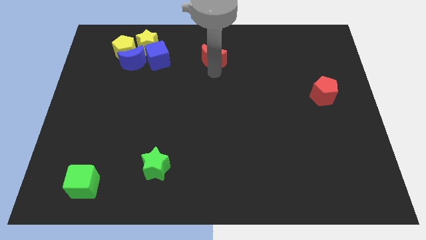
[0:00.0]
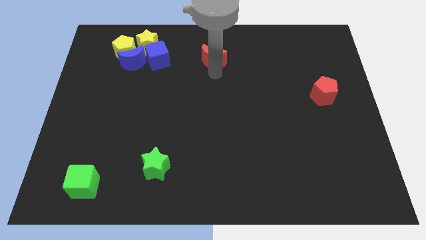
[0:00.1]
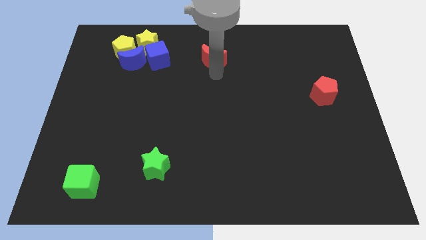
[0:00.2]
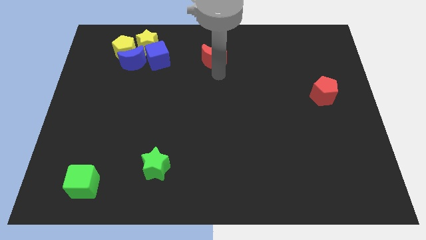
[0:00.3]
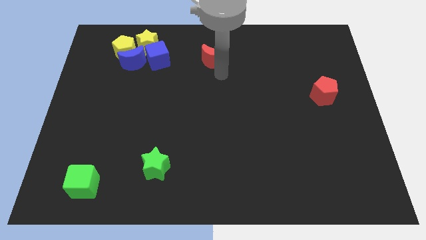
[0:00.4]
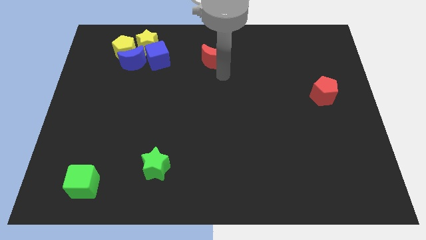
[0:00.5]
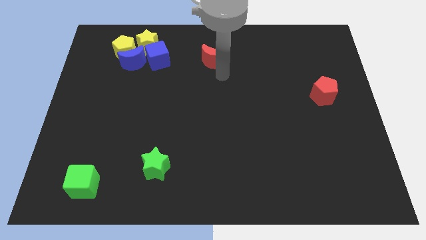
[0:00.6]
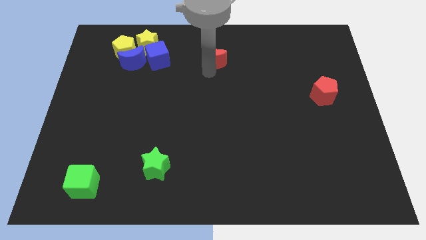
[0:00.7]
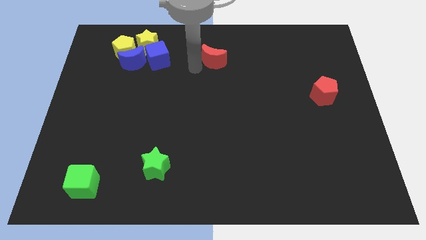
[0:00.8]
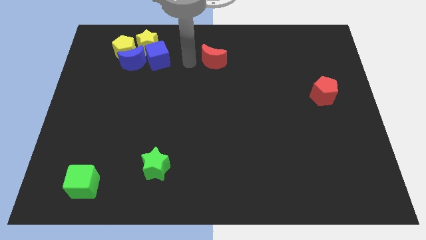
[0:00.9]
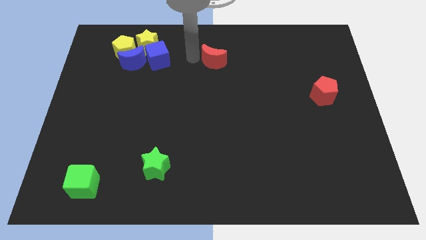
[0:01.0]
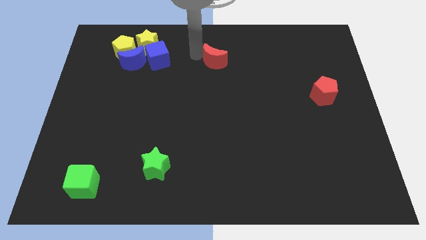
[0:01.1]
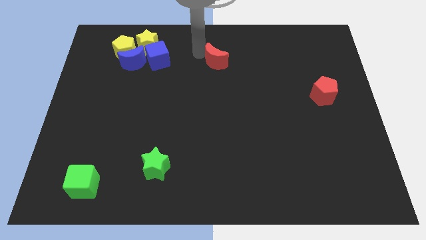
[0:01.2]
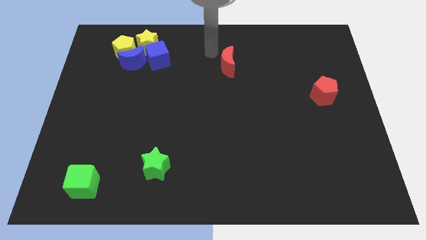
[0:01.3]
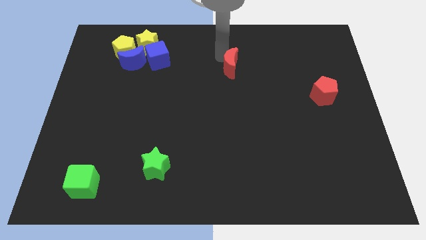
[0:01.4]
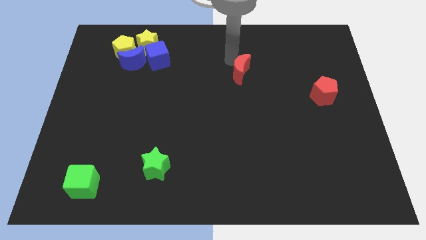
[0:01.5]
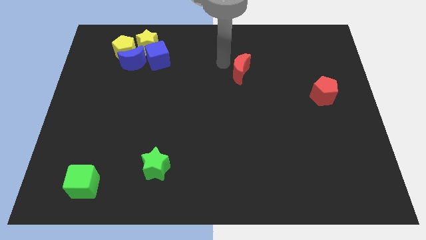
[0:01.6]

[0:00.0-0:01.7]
move red moon towards the red pentagon

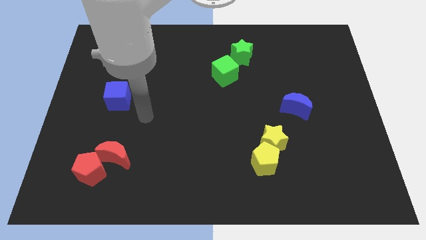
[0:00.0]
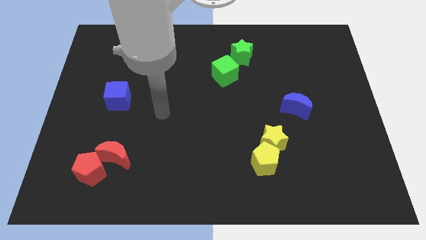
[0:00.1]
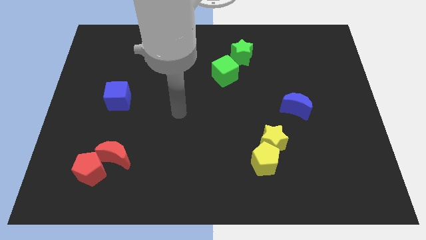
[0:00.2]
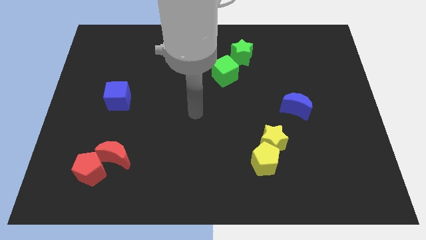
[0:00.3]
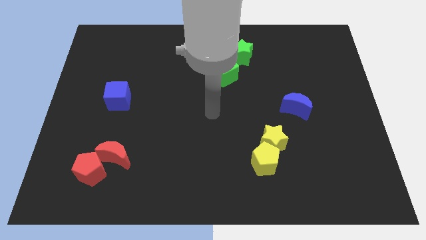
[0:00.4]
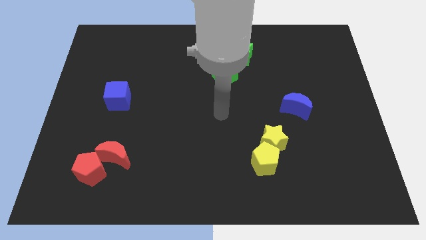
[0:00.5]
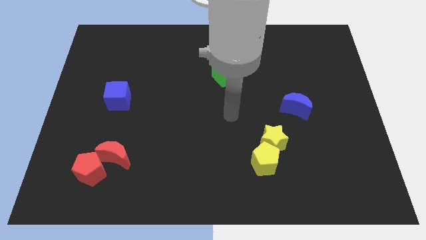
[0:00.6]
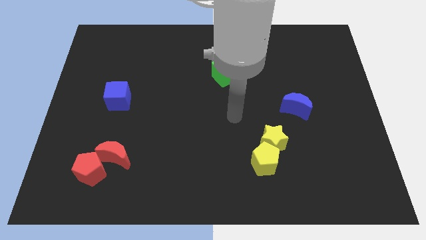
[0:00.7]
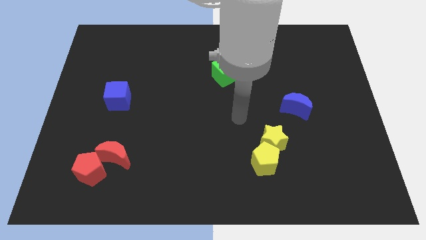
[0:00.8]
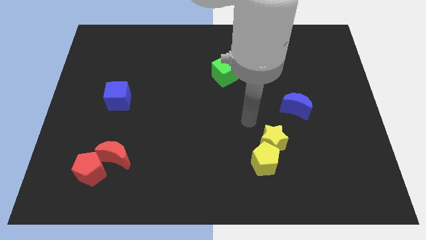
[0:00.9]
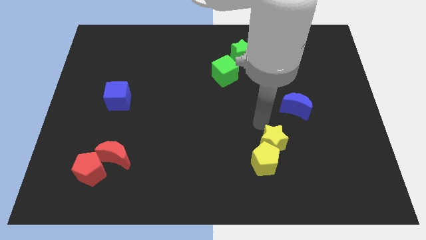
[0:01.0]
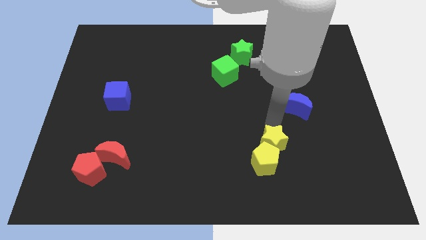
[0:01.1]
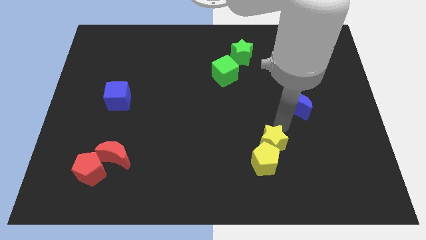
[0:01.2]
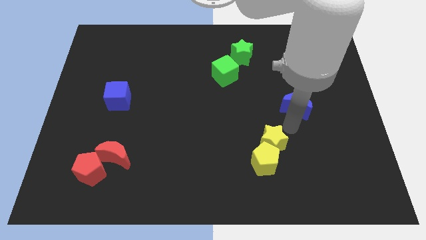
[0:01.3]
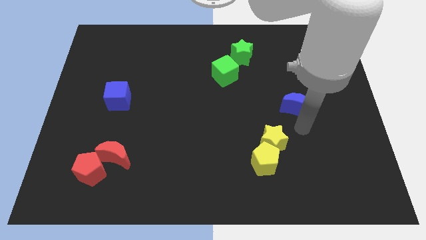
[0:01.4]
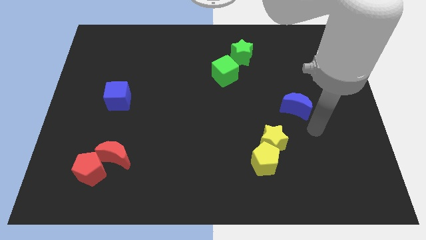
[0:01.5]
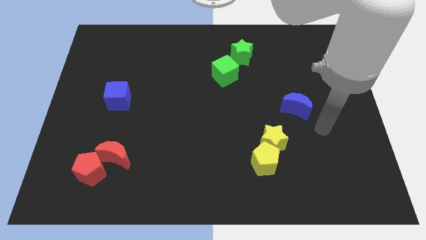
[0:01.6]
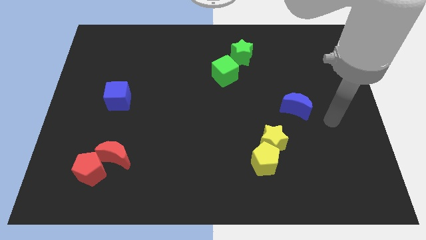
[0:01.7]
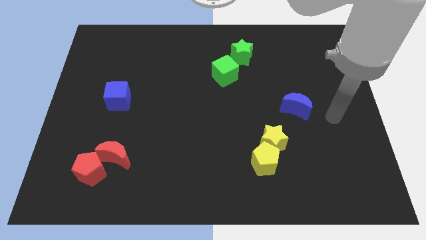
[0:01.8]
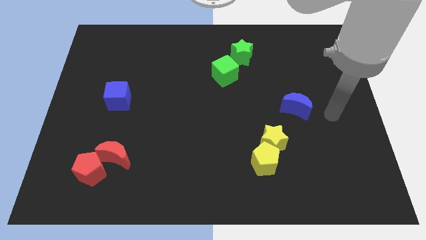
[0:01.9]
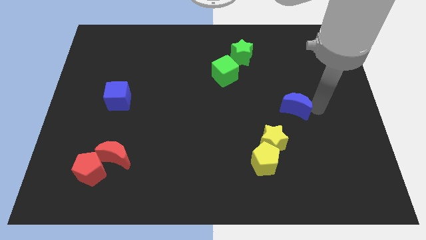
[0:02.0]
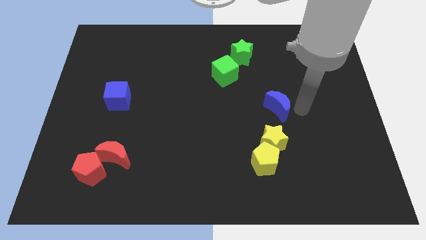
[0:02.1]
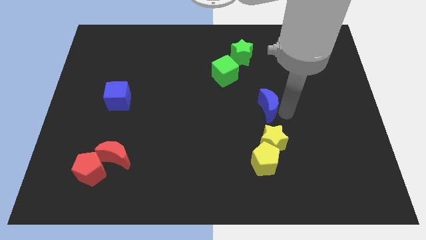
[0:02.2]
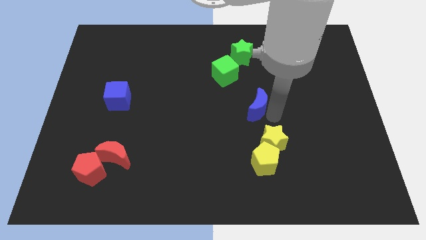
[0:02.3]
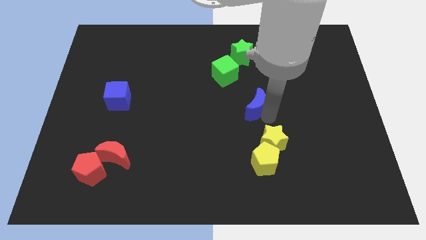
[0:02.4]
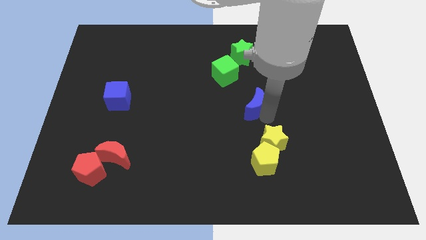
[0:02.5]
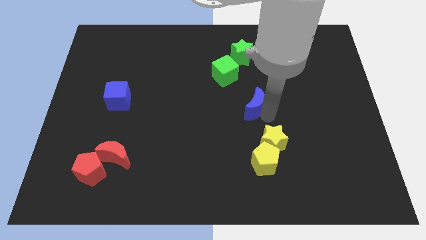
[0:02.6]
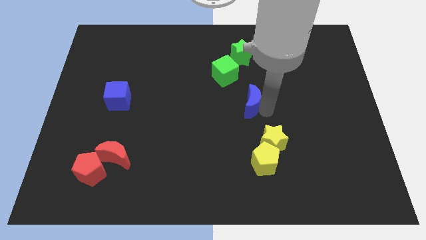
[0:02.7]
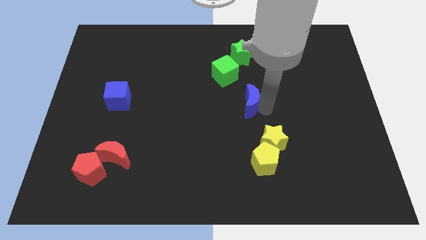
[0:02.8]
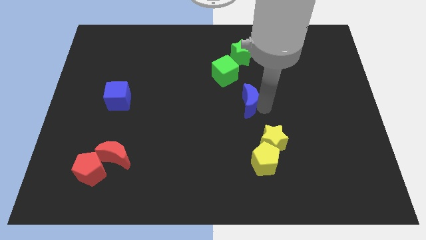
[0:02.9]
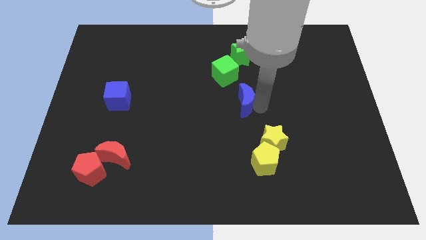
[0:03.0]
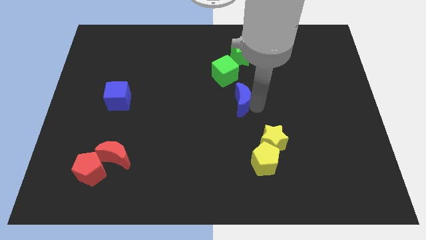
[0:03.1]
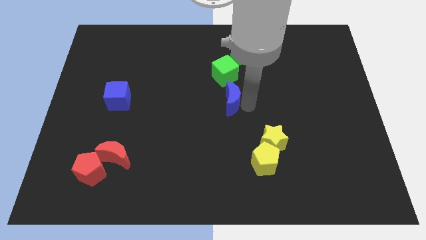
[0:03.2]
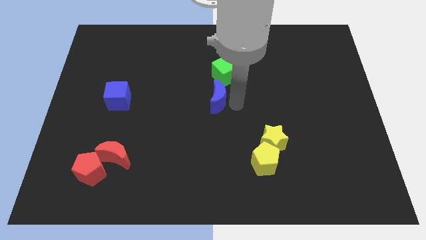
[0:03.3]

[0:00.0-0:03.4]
put blue crescent at the bottom of green cube

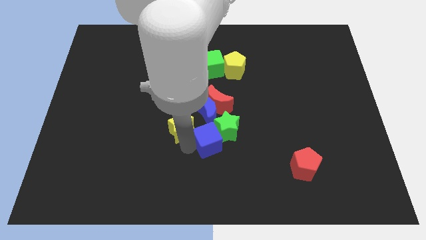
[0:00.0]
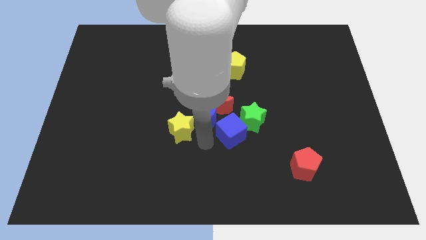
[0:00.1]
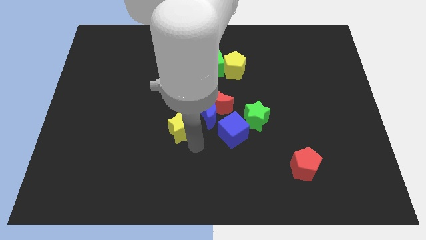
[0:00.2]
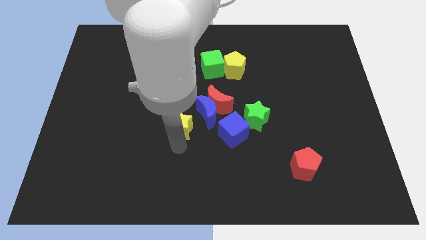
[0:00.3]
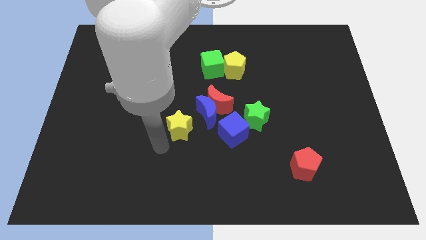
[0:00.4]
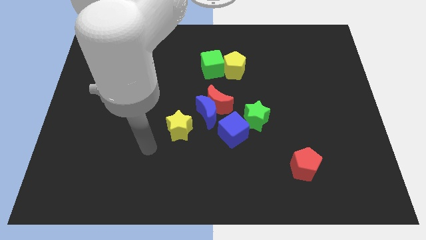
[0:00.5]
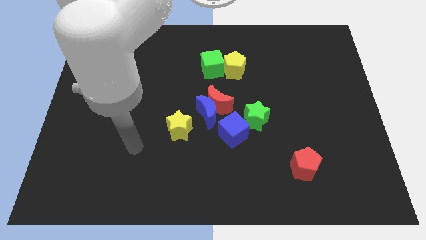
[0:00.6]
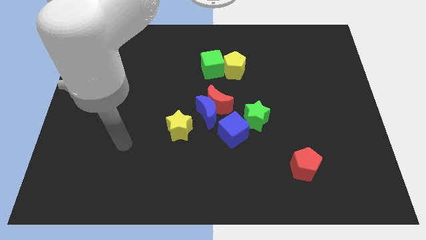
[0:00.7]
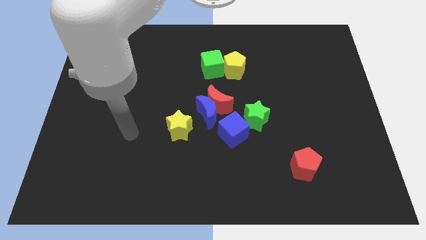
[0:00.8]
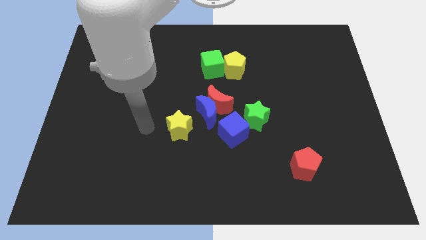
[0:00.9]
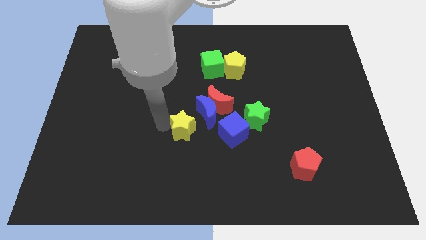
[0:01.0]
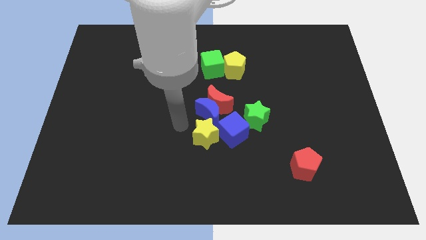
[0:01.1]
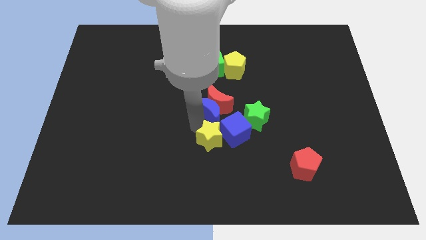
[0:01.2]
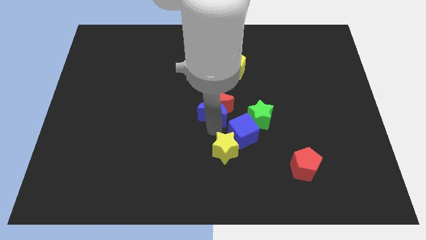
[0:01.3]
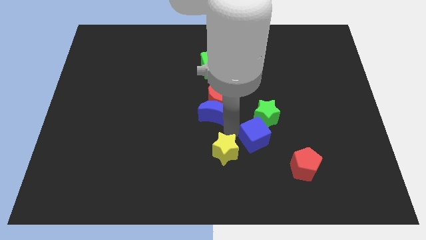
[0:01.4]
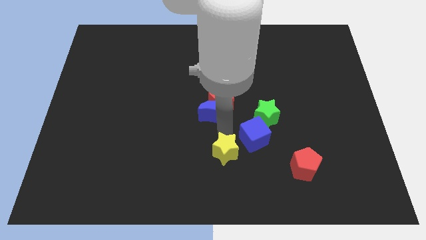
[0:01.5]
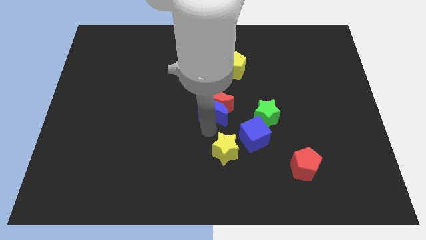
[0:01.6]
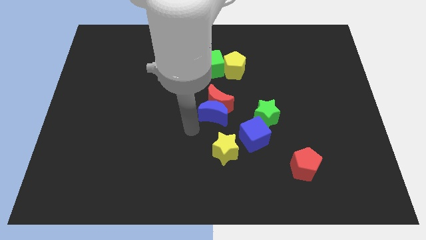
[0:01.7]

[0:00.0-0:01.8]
push the yellow star to the blue cube

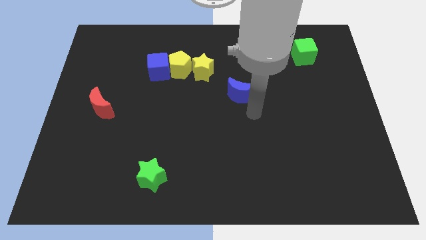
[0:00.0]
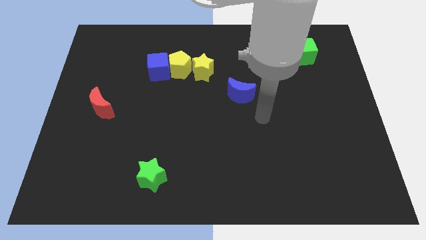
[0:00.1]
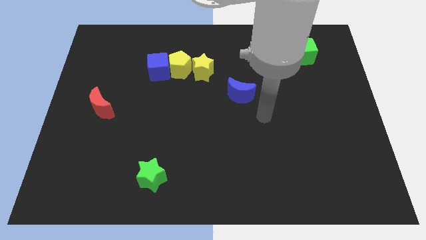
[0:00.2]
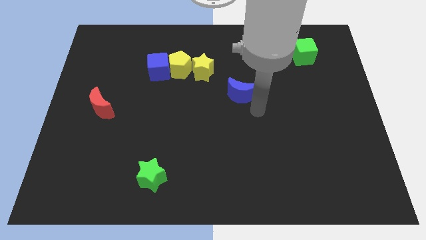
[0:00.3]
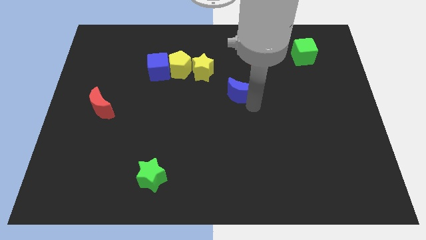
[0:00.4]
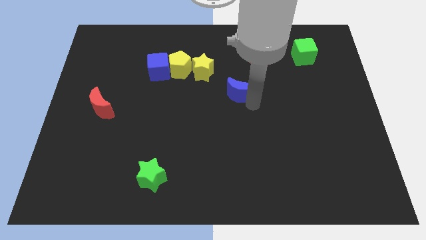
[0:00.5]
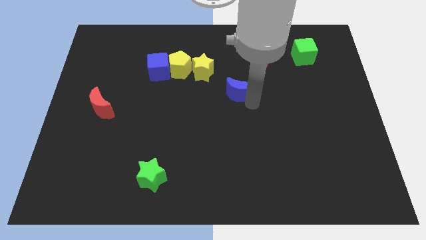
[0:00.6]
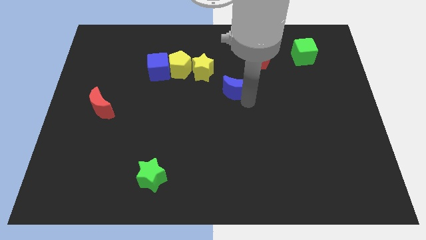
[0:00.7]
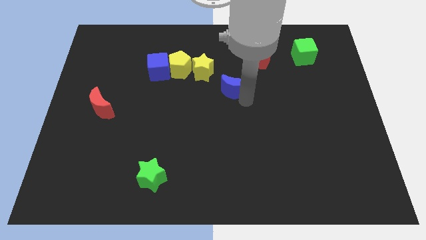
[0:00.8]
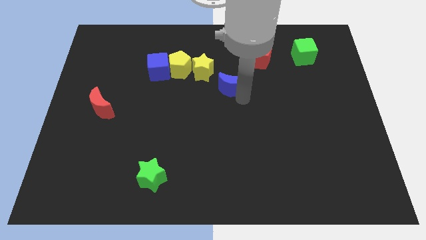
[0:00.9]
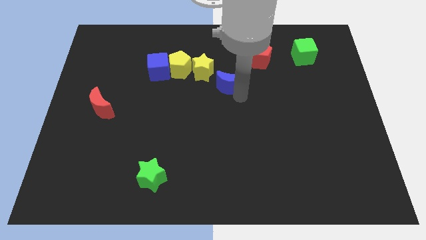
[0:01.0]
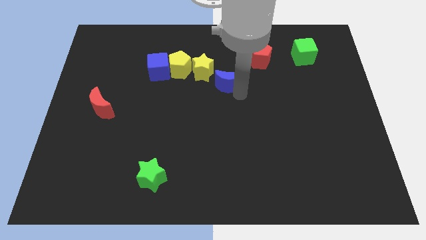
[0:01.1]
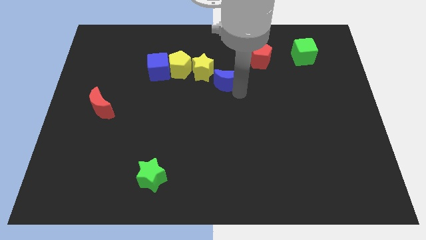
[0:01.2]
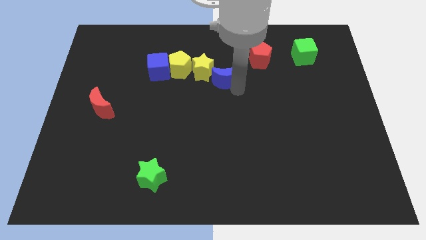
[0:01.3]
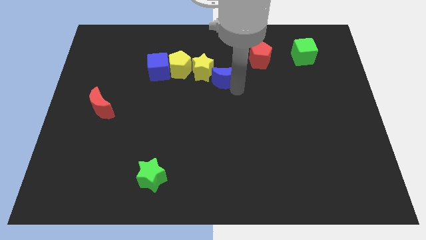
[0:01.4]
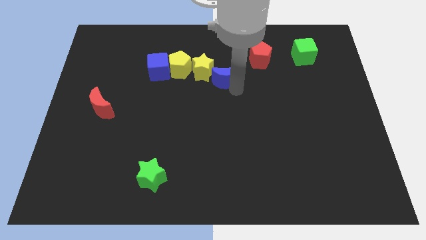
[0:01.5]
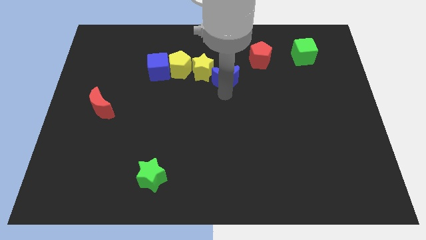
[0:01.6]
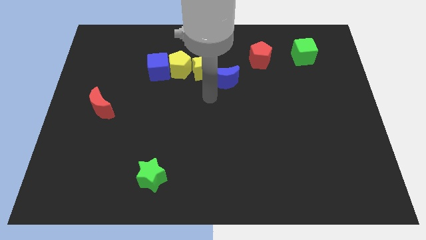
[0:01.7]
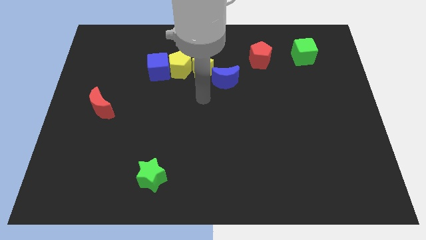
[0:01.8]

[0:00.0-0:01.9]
make a horizontal line by adding blue moon to other blocks

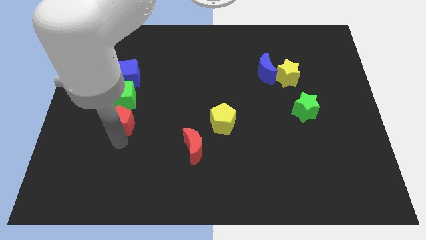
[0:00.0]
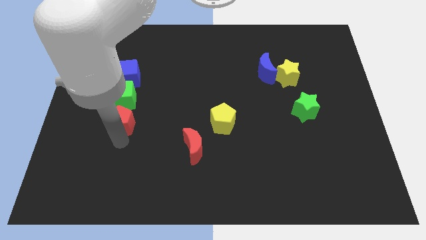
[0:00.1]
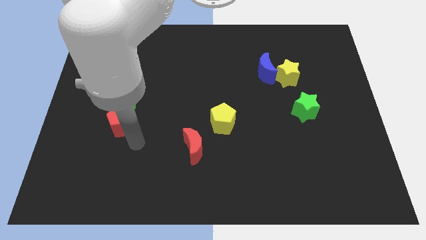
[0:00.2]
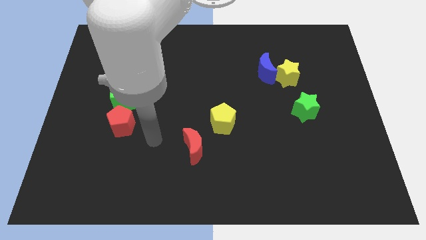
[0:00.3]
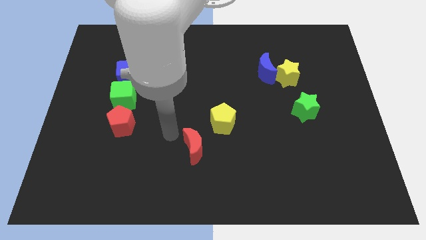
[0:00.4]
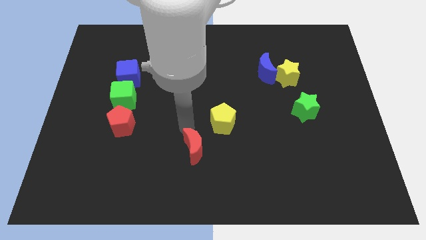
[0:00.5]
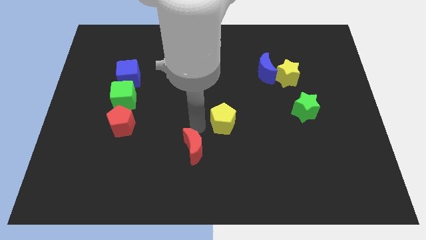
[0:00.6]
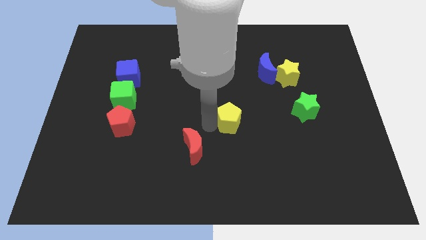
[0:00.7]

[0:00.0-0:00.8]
place your arm to the left of yellow pentagon
